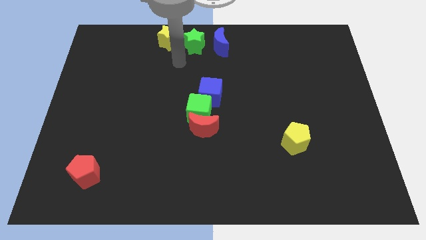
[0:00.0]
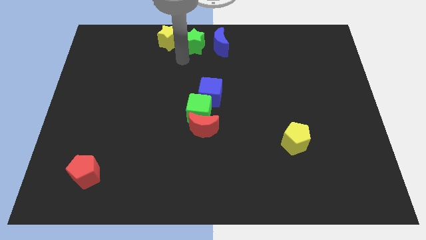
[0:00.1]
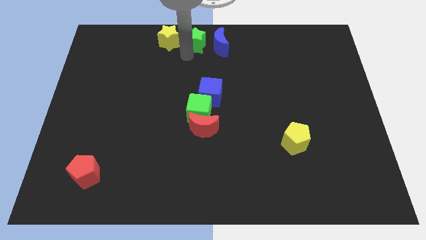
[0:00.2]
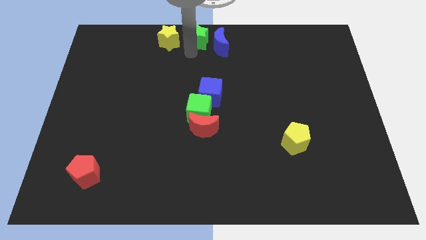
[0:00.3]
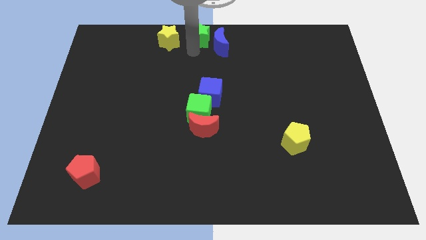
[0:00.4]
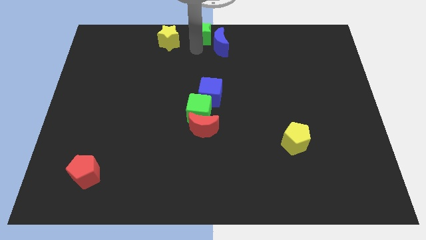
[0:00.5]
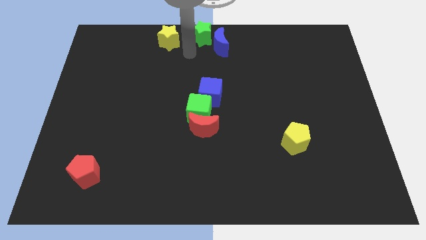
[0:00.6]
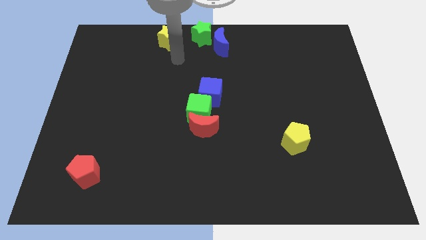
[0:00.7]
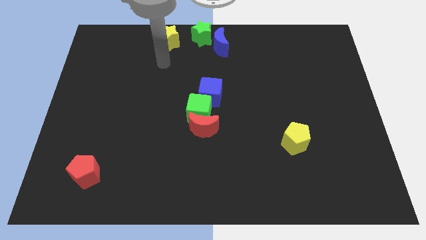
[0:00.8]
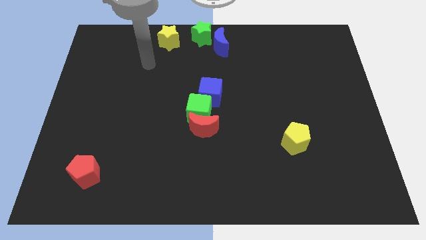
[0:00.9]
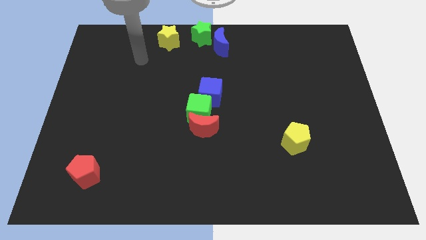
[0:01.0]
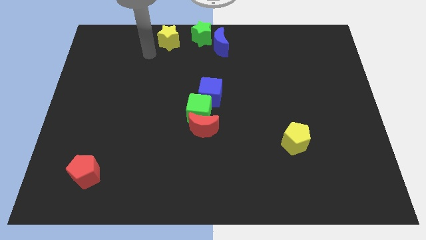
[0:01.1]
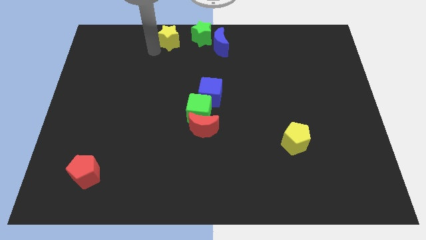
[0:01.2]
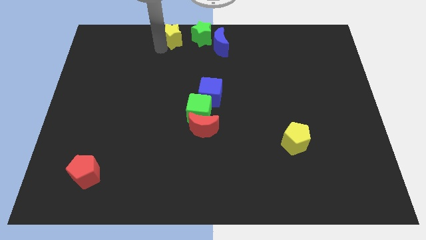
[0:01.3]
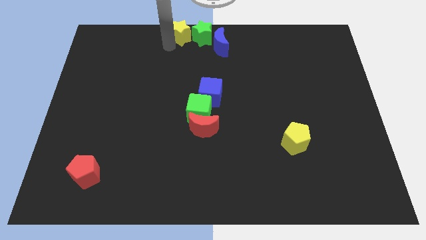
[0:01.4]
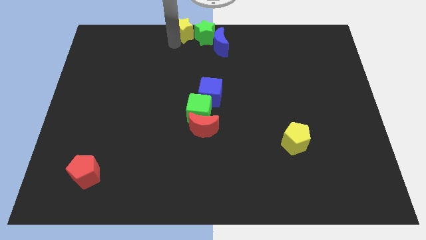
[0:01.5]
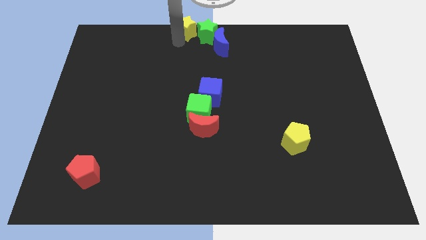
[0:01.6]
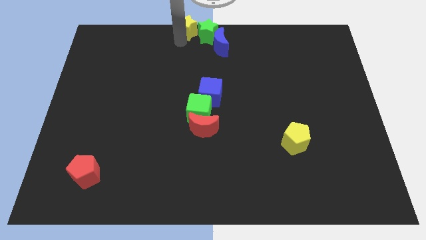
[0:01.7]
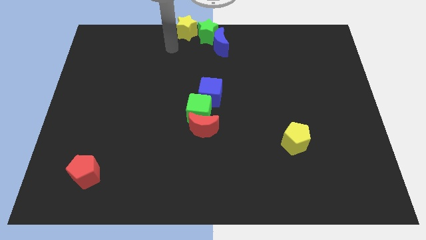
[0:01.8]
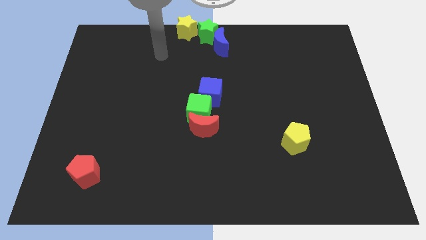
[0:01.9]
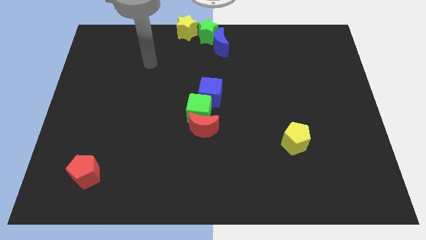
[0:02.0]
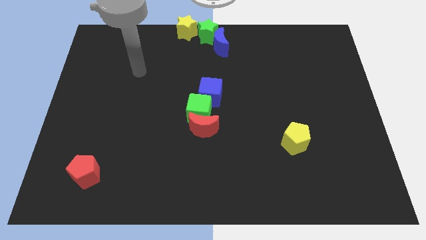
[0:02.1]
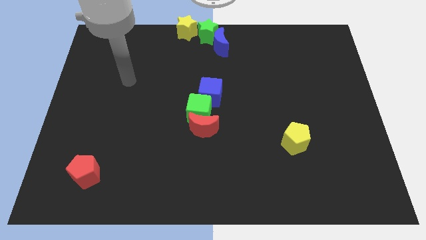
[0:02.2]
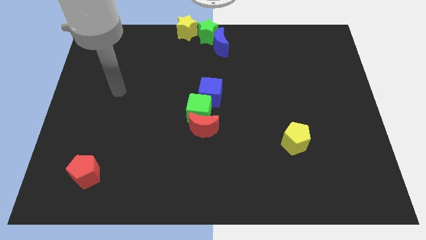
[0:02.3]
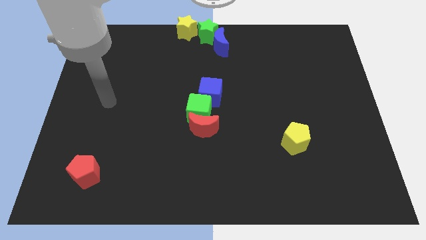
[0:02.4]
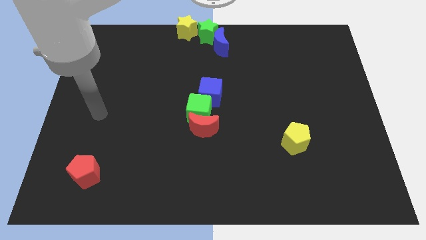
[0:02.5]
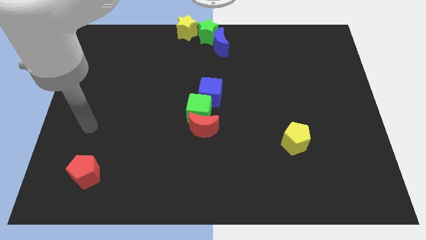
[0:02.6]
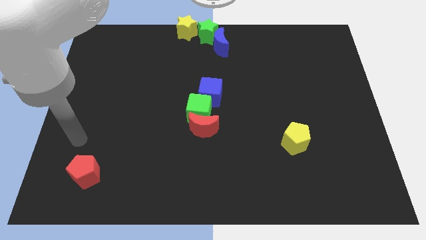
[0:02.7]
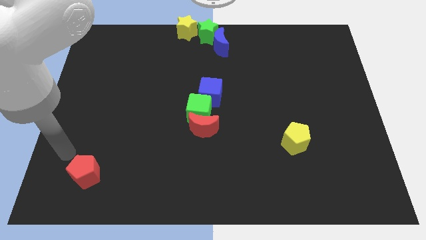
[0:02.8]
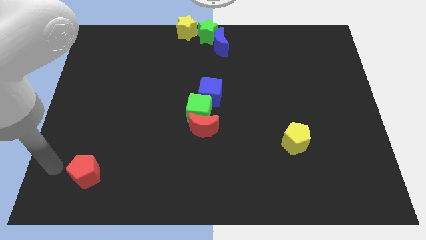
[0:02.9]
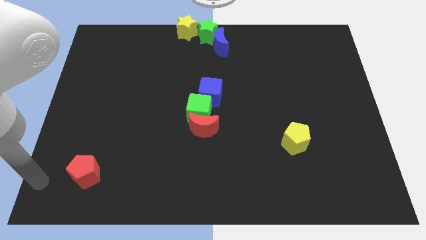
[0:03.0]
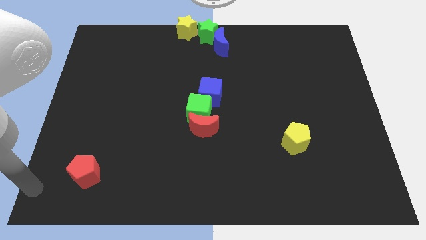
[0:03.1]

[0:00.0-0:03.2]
slide the green and the yellow star at the top center

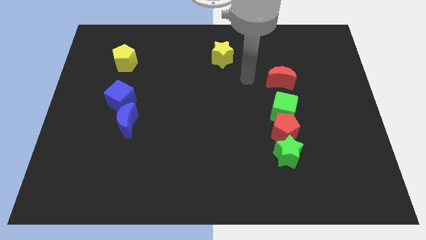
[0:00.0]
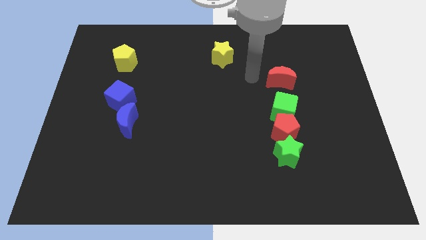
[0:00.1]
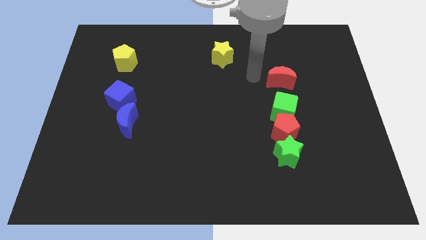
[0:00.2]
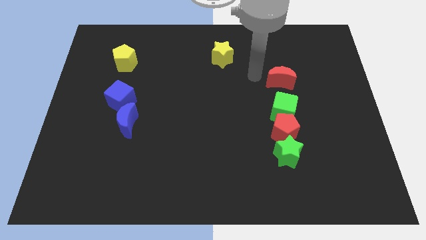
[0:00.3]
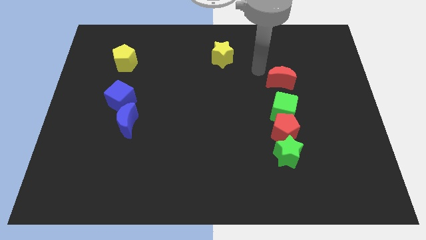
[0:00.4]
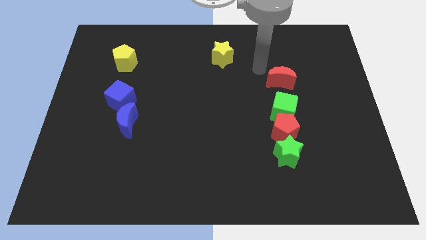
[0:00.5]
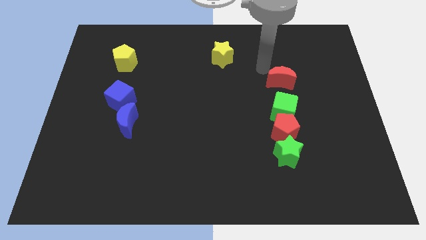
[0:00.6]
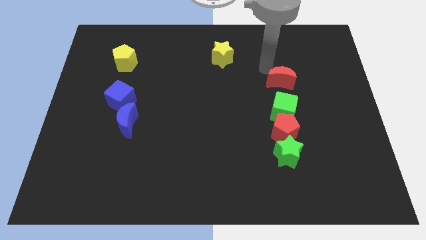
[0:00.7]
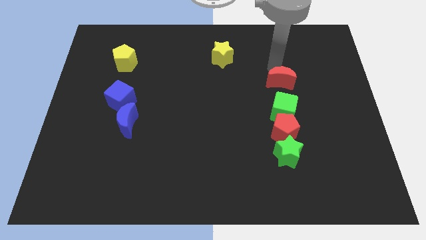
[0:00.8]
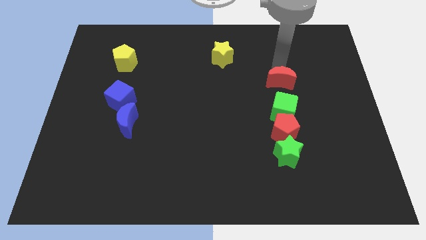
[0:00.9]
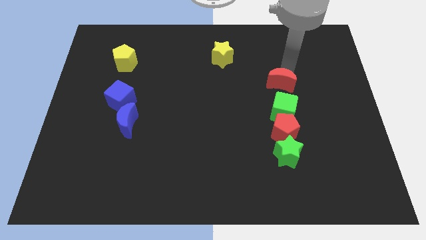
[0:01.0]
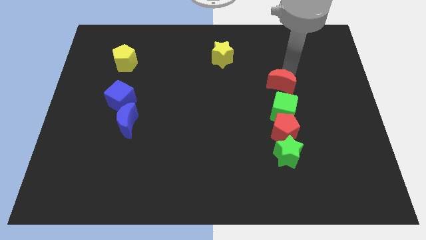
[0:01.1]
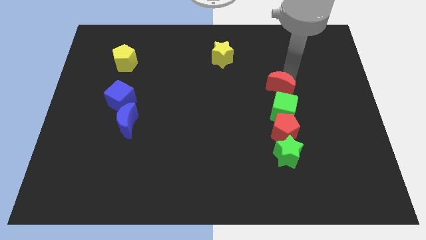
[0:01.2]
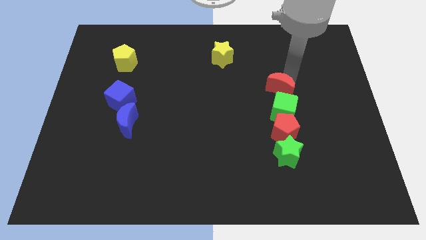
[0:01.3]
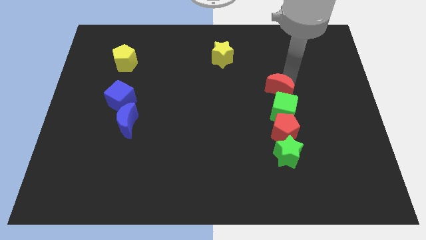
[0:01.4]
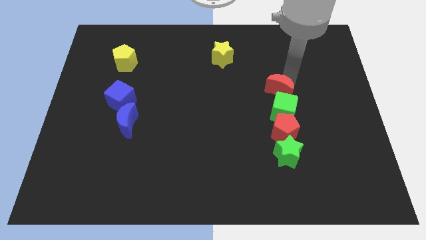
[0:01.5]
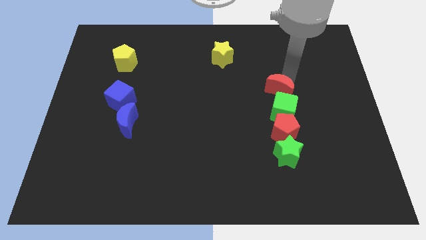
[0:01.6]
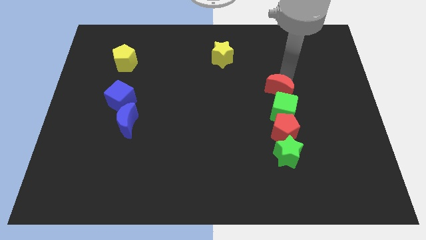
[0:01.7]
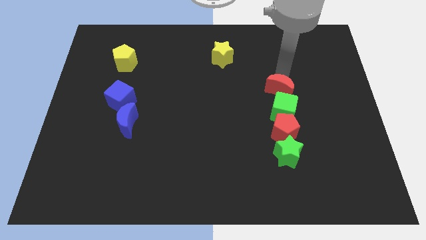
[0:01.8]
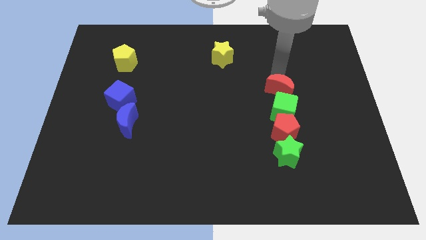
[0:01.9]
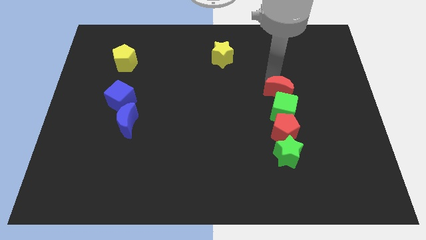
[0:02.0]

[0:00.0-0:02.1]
push the red crescent to the top of the green cube

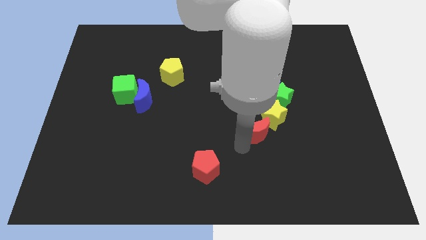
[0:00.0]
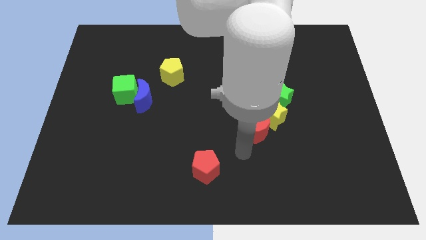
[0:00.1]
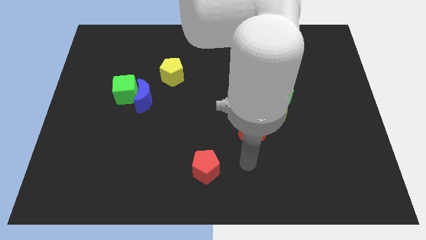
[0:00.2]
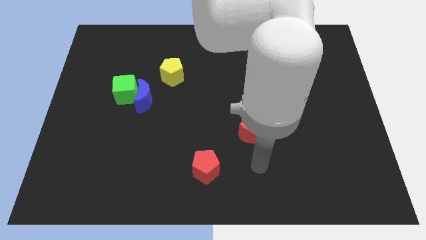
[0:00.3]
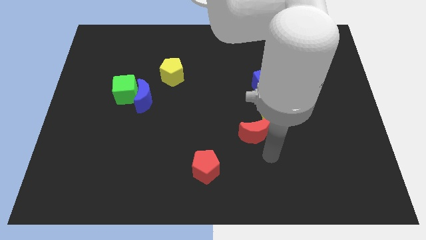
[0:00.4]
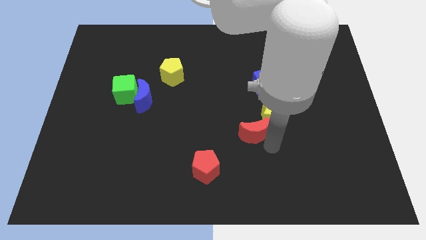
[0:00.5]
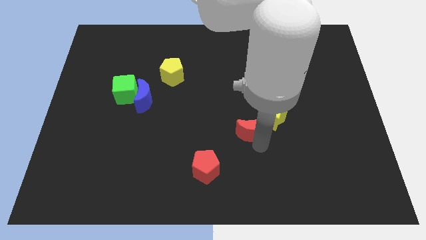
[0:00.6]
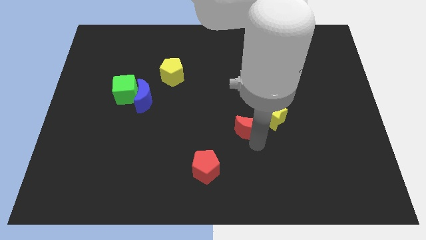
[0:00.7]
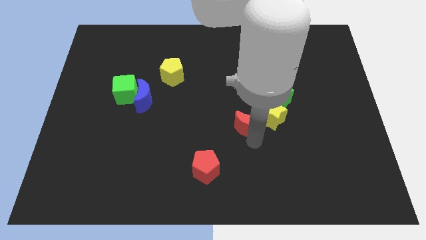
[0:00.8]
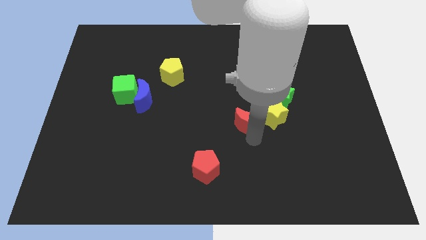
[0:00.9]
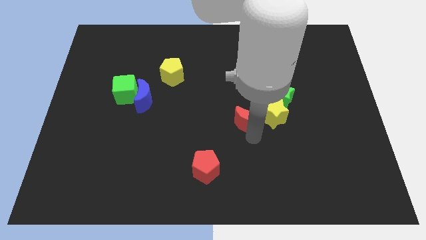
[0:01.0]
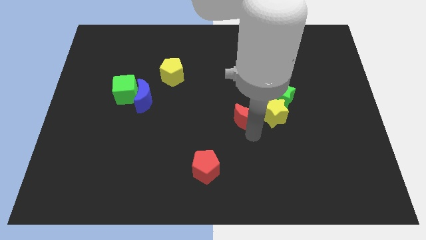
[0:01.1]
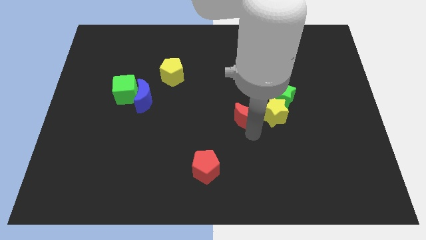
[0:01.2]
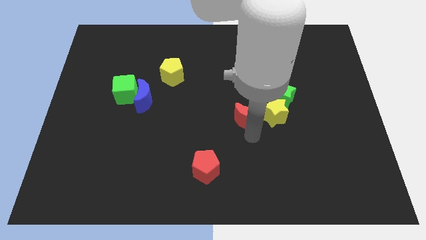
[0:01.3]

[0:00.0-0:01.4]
put the red moon left to the yellow star

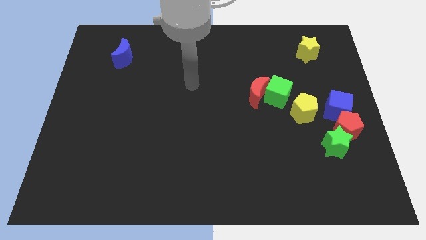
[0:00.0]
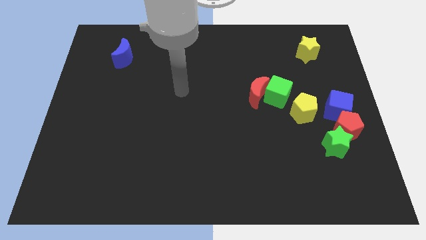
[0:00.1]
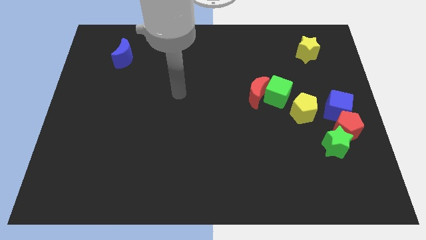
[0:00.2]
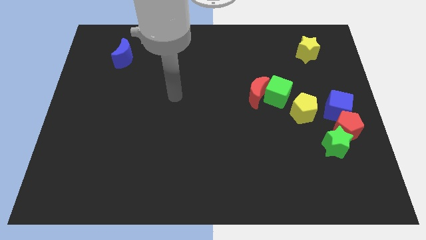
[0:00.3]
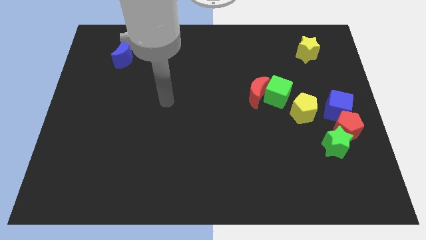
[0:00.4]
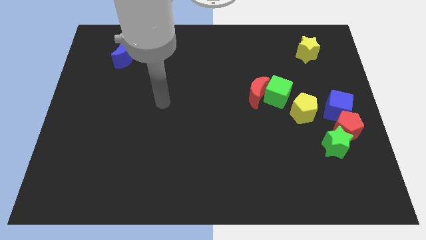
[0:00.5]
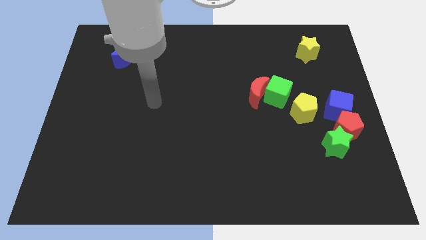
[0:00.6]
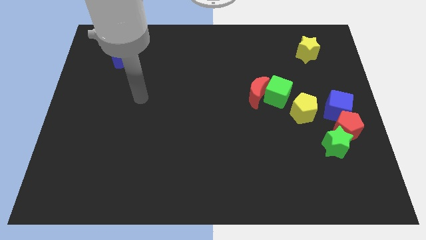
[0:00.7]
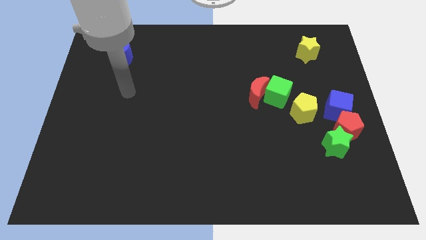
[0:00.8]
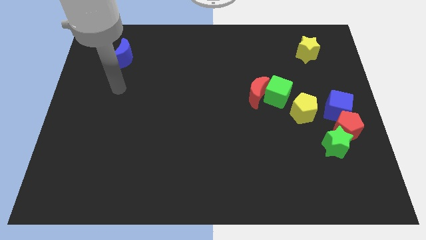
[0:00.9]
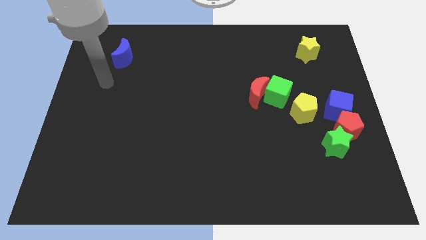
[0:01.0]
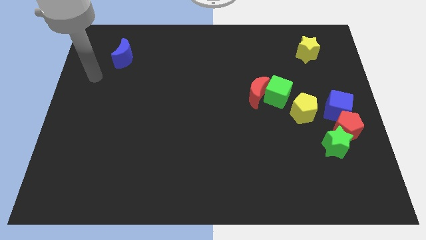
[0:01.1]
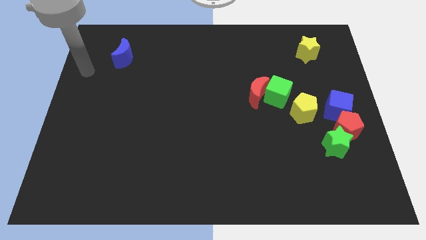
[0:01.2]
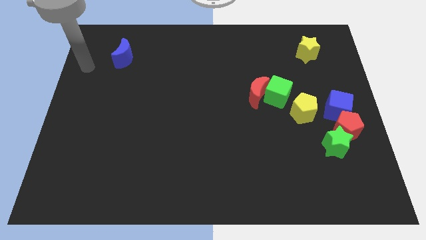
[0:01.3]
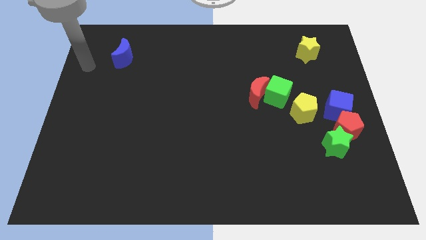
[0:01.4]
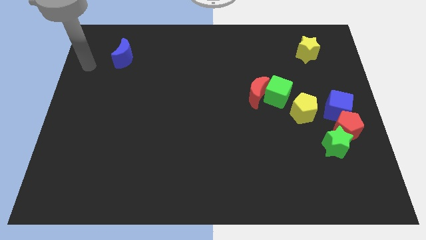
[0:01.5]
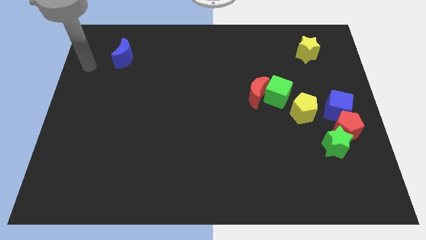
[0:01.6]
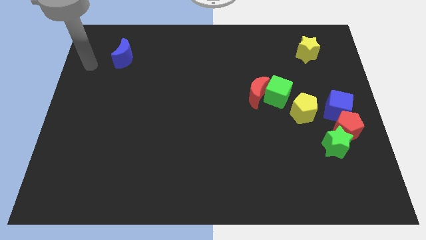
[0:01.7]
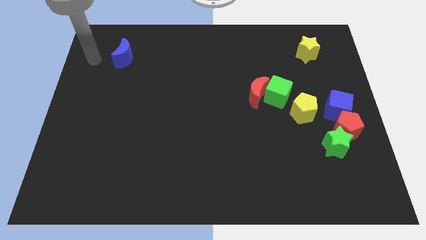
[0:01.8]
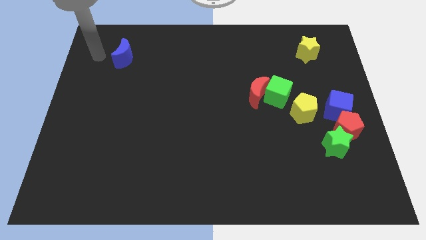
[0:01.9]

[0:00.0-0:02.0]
go near the blue moon

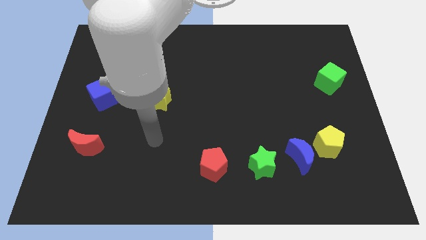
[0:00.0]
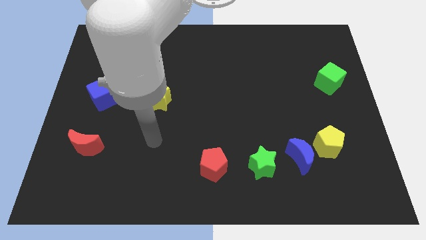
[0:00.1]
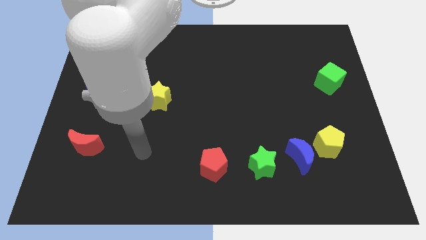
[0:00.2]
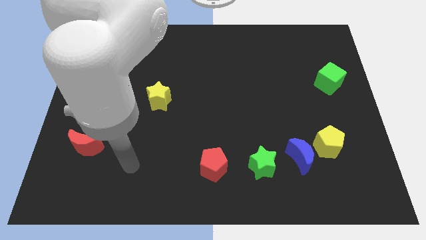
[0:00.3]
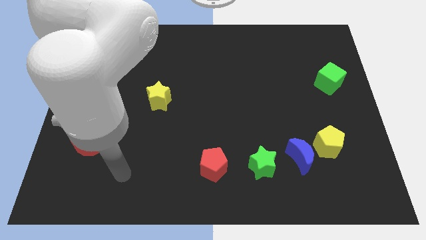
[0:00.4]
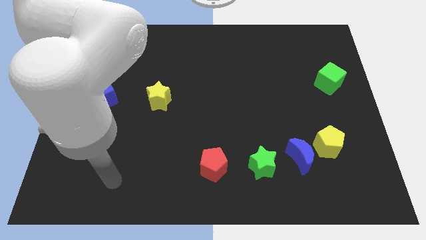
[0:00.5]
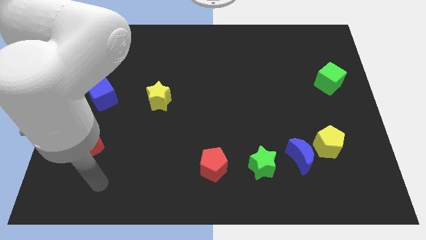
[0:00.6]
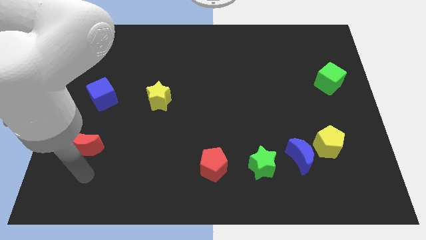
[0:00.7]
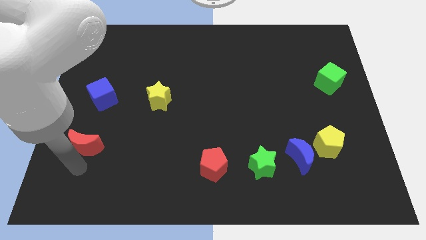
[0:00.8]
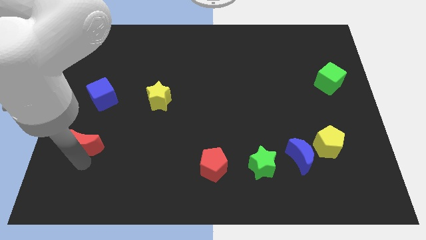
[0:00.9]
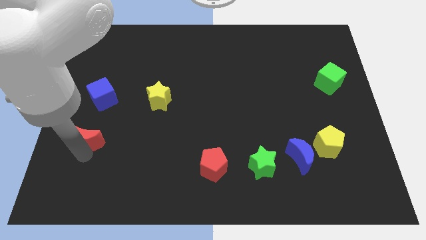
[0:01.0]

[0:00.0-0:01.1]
tap the bottom side of red moon
